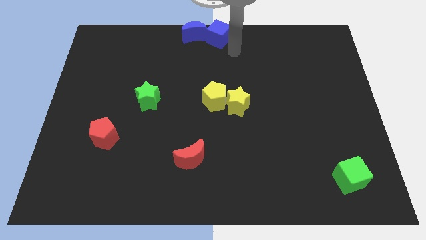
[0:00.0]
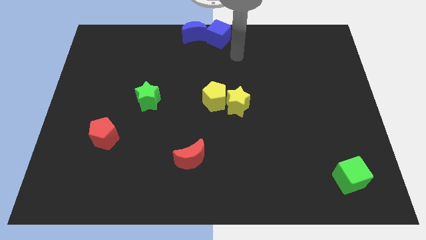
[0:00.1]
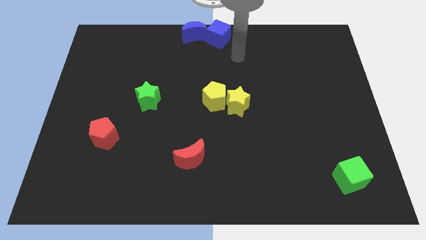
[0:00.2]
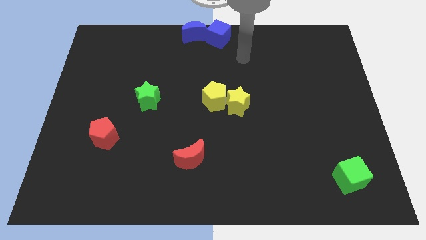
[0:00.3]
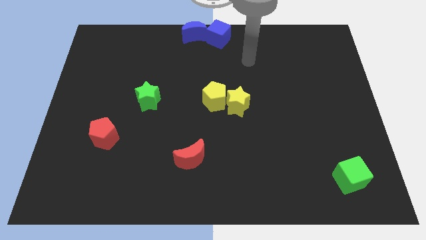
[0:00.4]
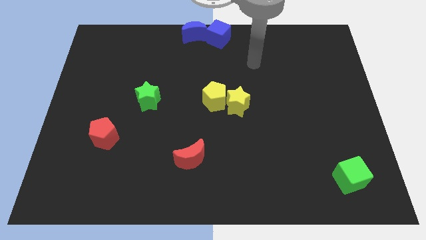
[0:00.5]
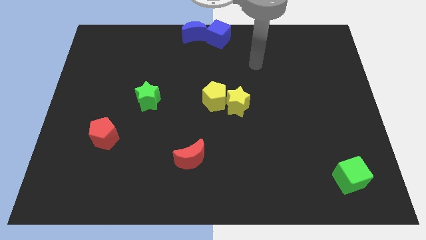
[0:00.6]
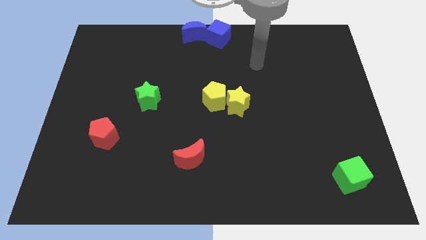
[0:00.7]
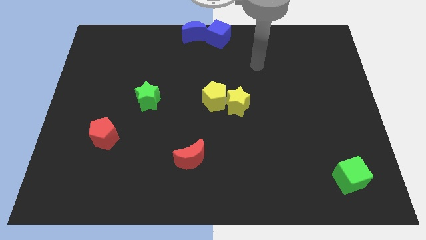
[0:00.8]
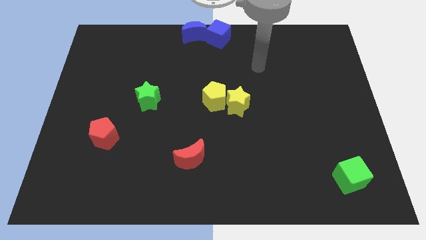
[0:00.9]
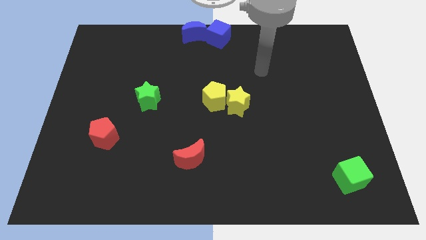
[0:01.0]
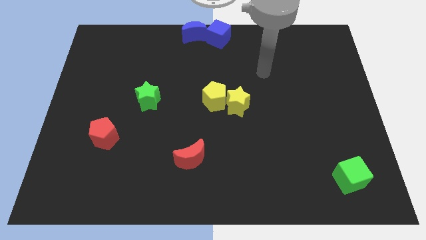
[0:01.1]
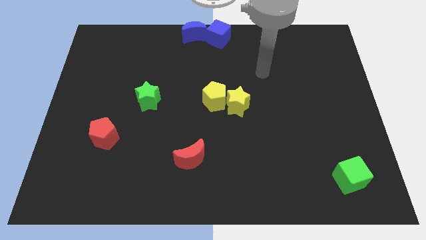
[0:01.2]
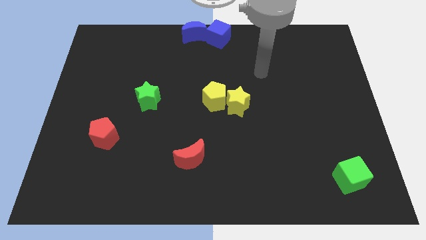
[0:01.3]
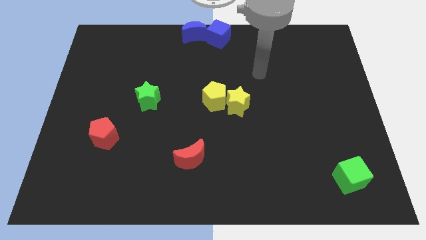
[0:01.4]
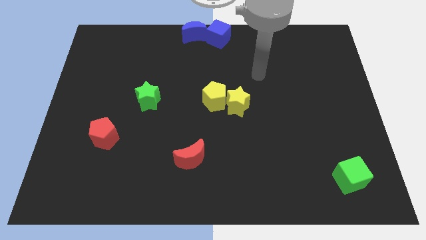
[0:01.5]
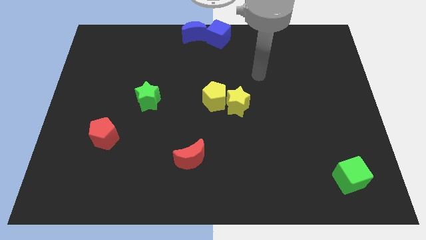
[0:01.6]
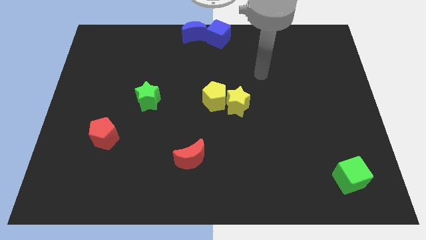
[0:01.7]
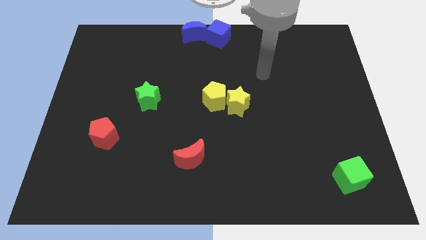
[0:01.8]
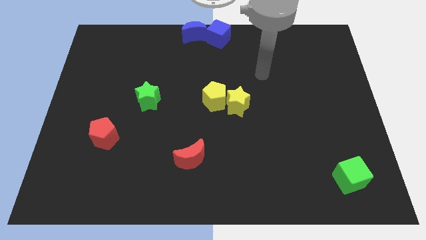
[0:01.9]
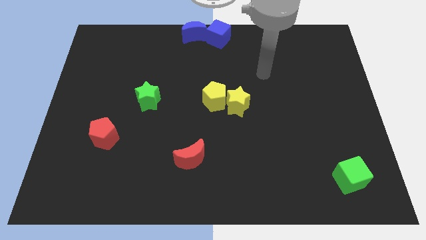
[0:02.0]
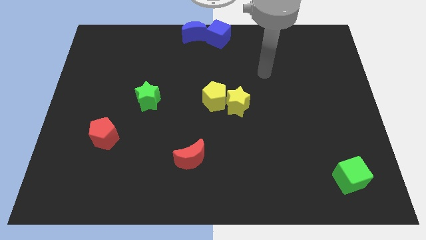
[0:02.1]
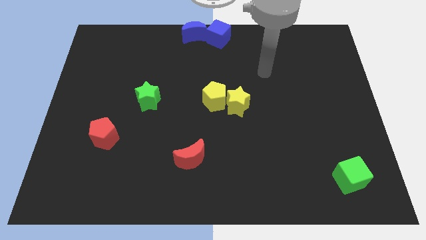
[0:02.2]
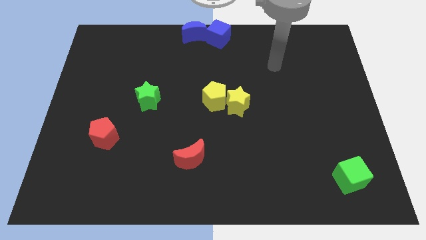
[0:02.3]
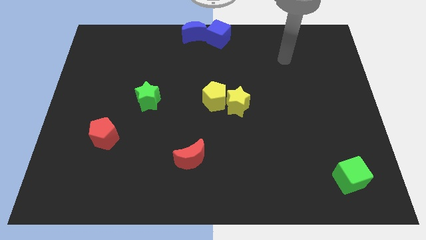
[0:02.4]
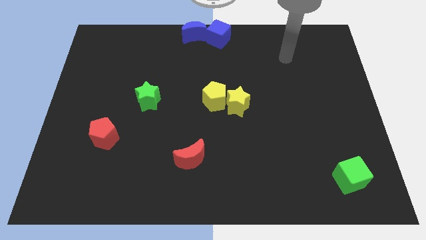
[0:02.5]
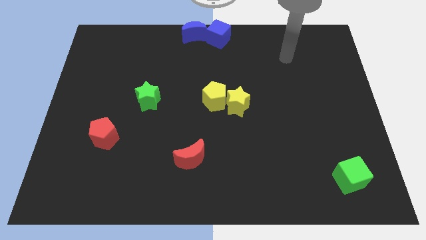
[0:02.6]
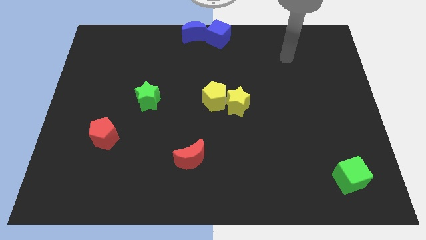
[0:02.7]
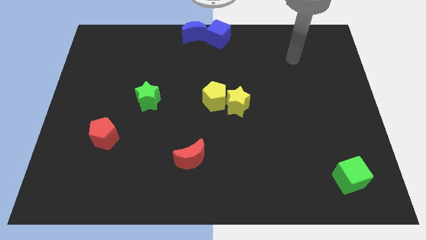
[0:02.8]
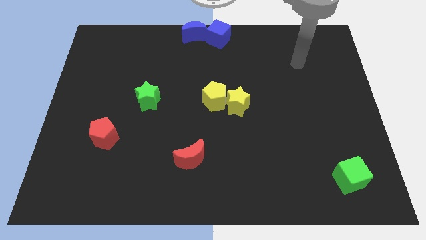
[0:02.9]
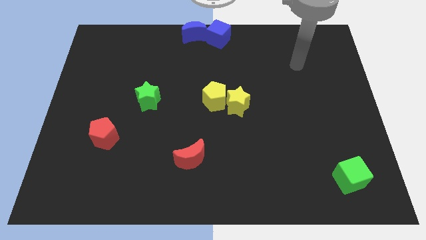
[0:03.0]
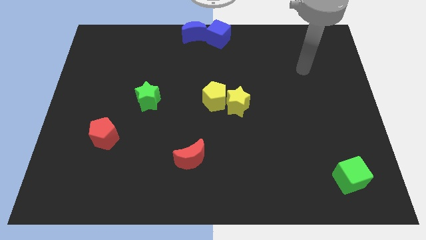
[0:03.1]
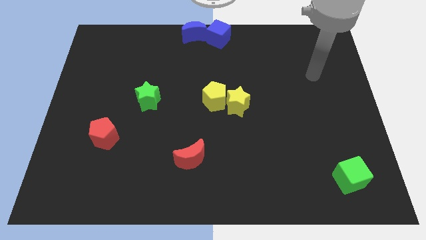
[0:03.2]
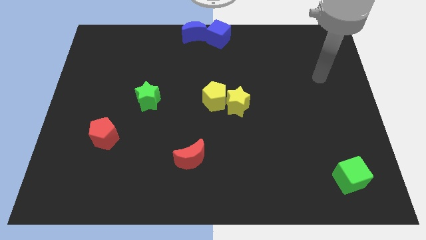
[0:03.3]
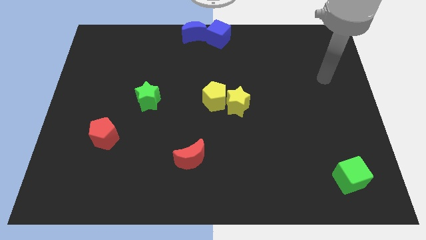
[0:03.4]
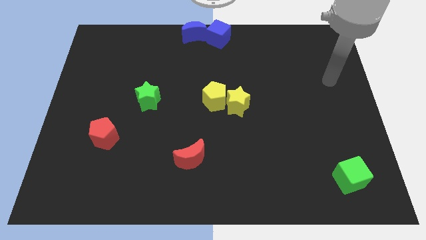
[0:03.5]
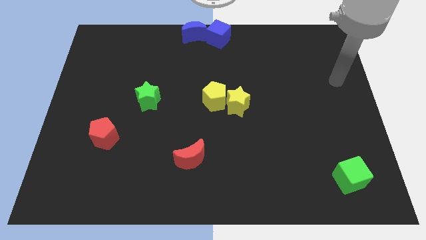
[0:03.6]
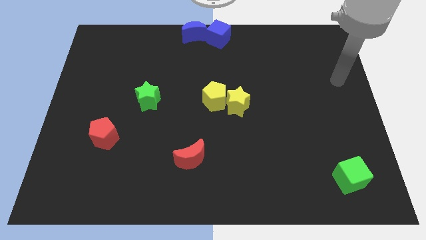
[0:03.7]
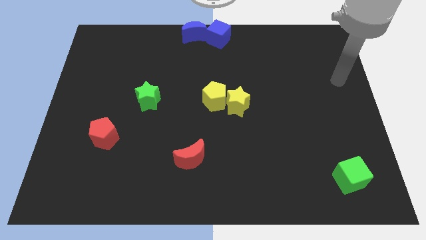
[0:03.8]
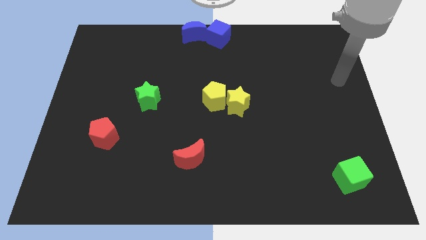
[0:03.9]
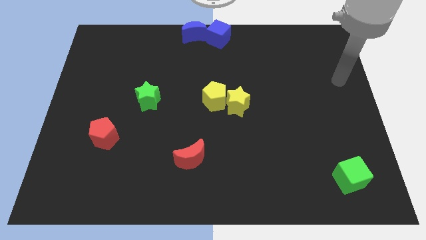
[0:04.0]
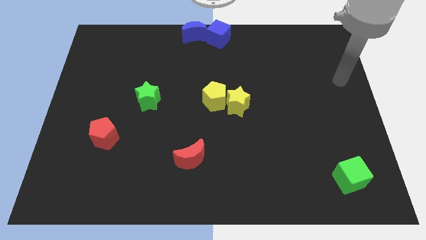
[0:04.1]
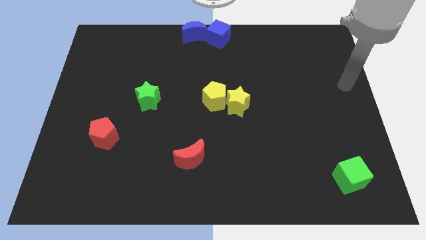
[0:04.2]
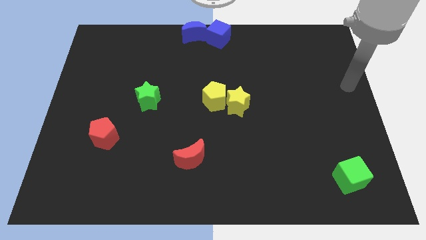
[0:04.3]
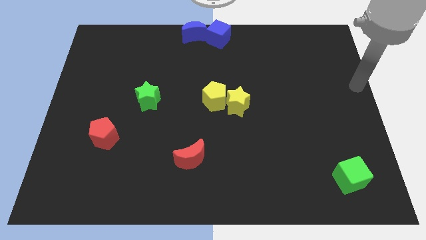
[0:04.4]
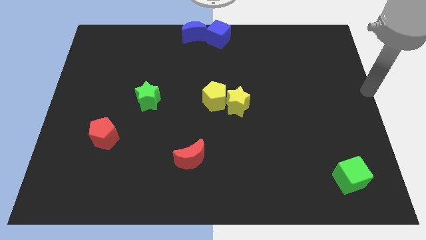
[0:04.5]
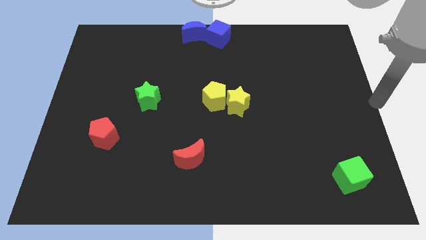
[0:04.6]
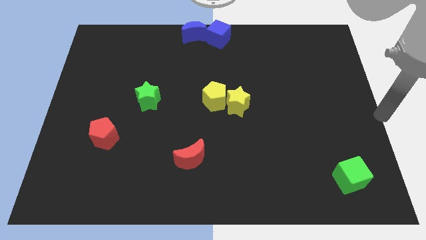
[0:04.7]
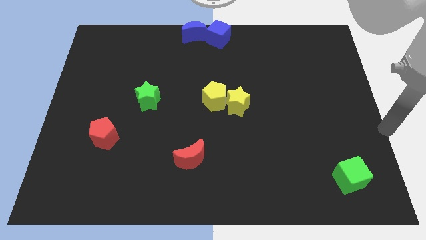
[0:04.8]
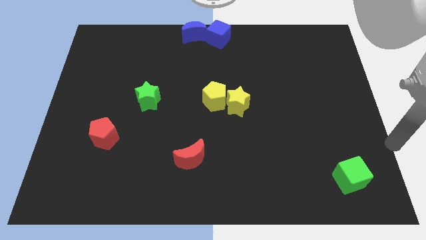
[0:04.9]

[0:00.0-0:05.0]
move your arm away from the blue cube

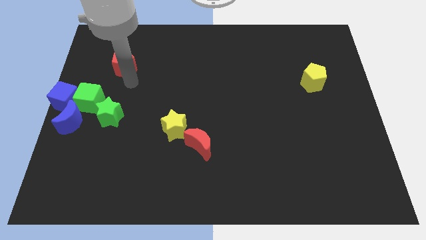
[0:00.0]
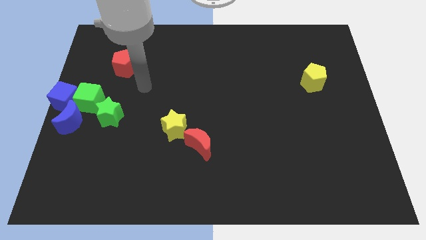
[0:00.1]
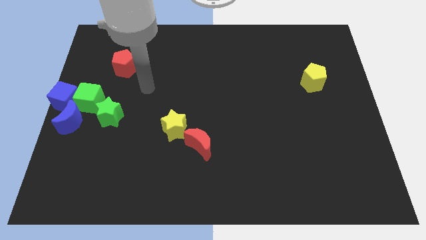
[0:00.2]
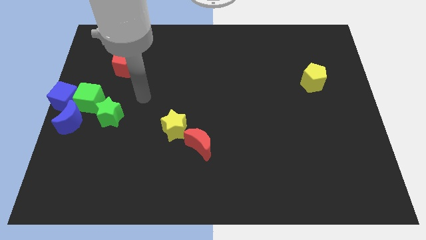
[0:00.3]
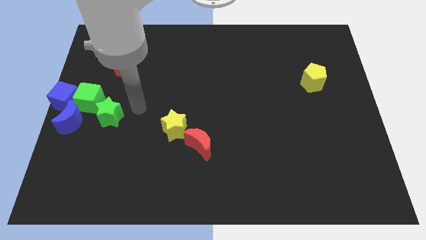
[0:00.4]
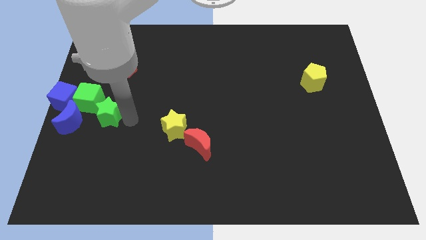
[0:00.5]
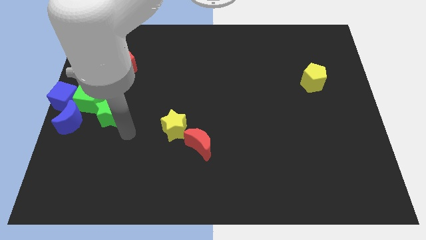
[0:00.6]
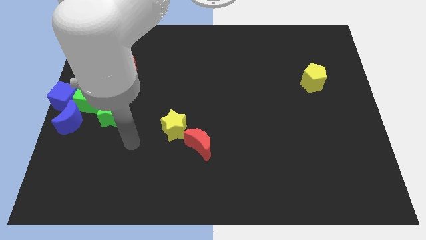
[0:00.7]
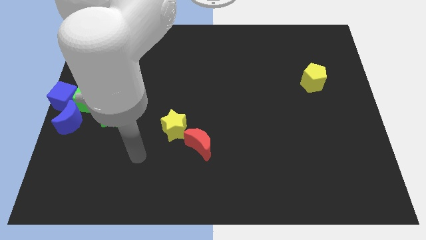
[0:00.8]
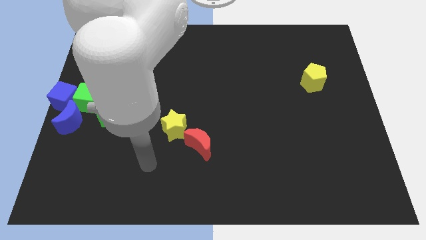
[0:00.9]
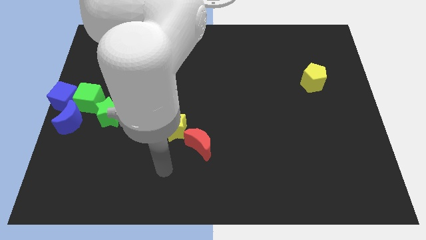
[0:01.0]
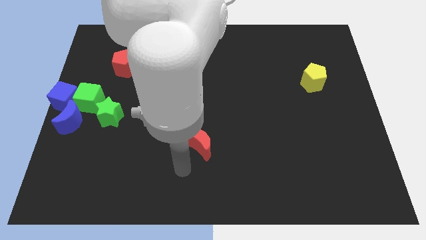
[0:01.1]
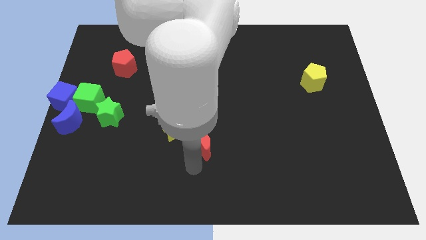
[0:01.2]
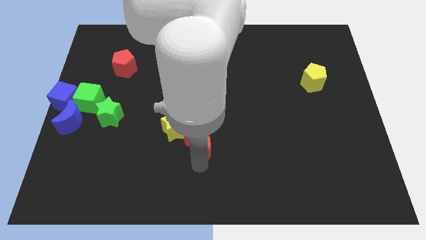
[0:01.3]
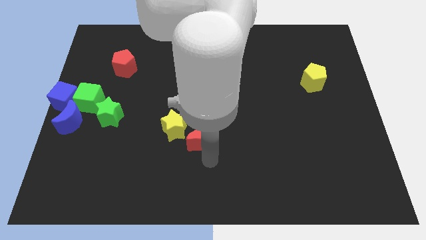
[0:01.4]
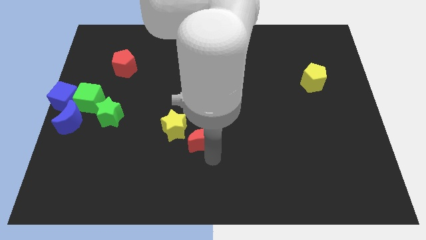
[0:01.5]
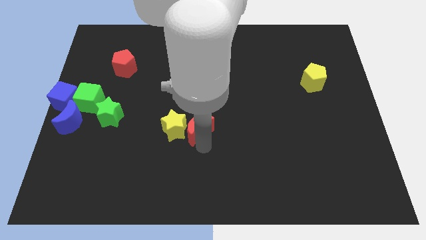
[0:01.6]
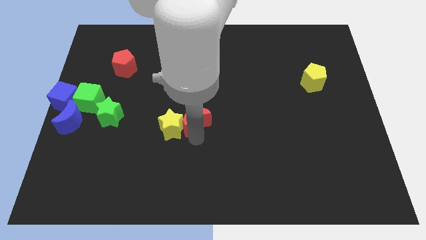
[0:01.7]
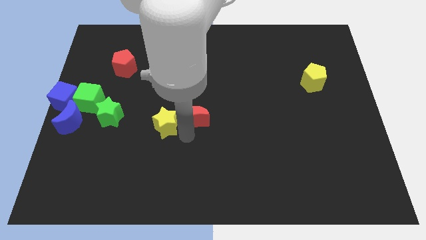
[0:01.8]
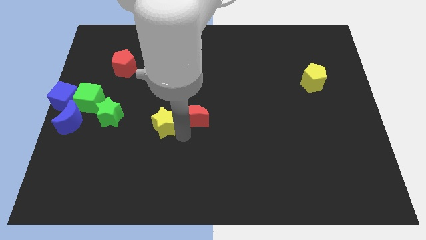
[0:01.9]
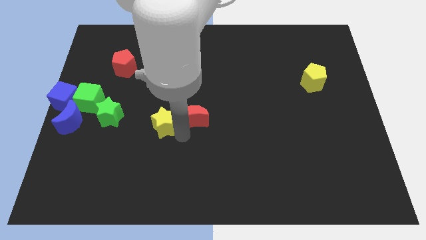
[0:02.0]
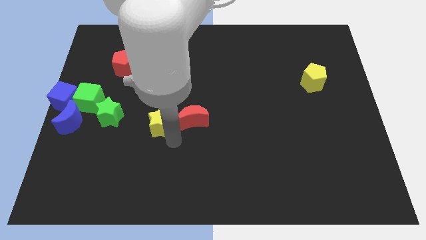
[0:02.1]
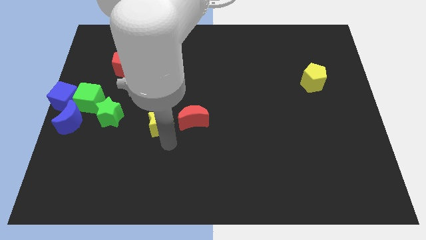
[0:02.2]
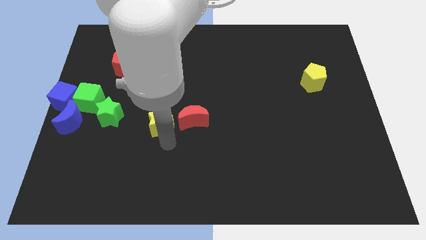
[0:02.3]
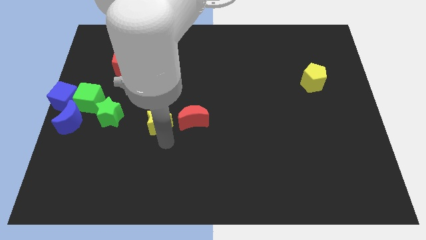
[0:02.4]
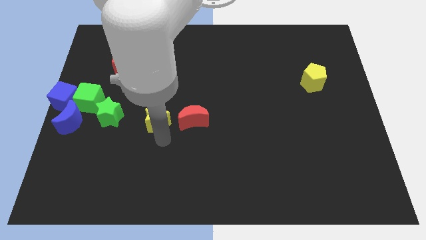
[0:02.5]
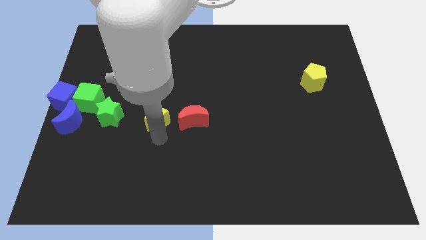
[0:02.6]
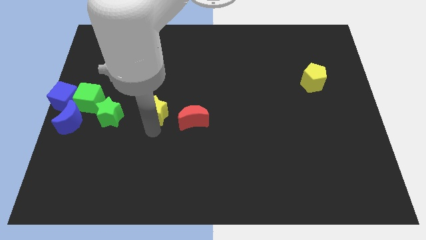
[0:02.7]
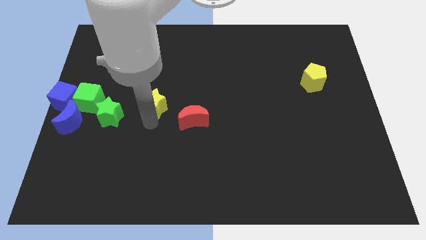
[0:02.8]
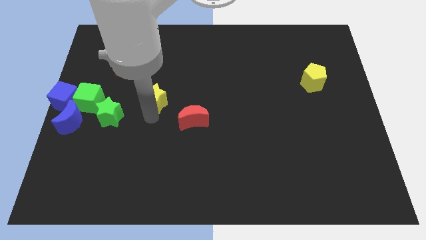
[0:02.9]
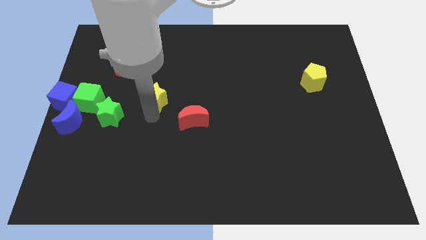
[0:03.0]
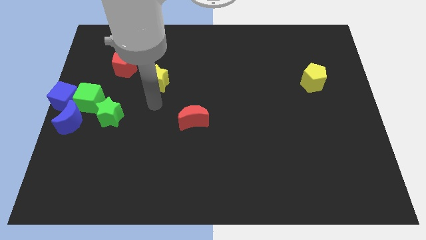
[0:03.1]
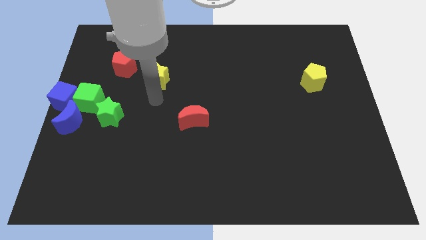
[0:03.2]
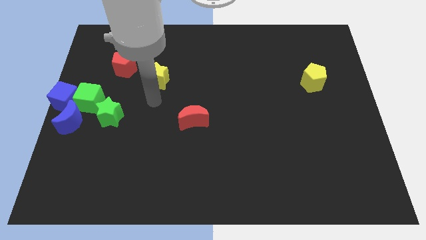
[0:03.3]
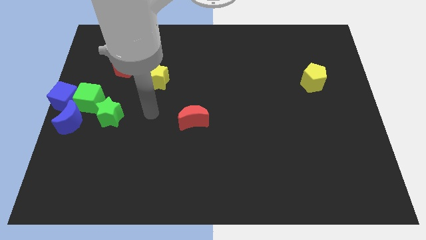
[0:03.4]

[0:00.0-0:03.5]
separate the yellow star from the red moon

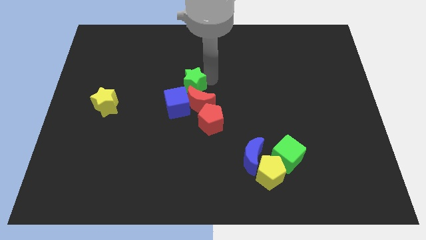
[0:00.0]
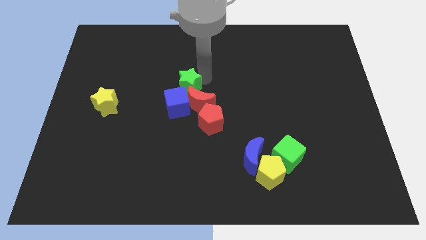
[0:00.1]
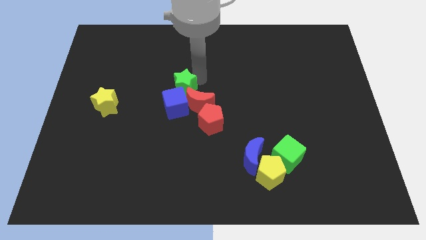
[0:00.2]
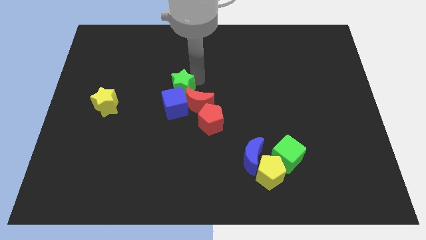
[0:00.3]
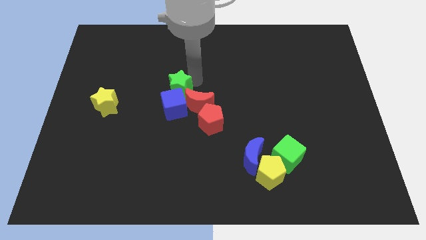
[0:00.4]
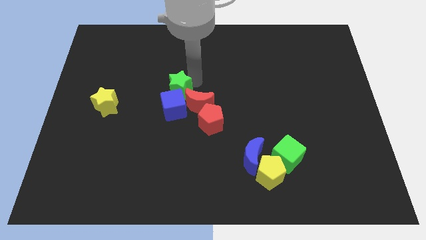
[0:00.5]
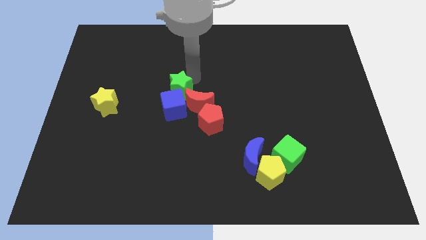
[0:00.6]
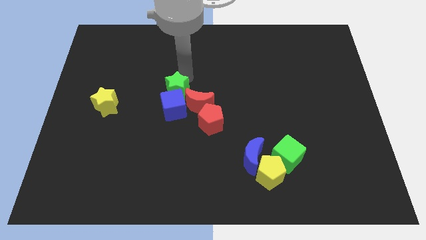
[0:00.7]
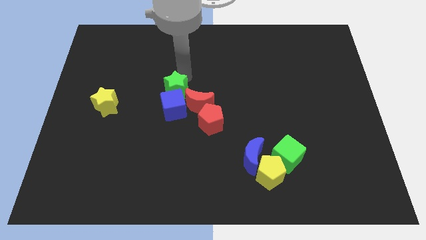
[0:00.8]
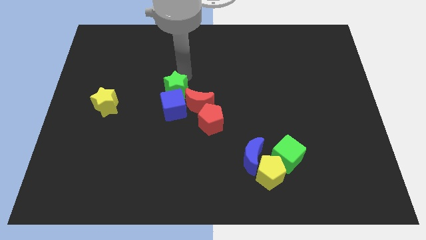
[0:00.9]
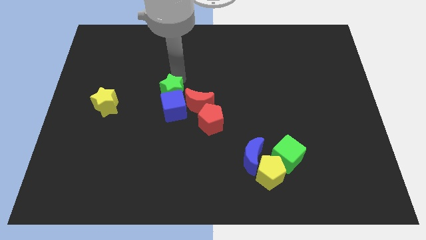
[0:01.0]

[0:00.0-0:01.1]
push the green star into the blue cube
